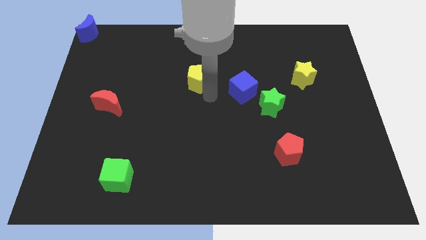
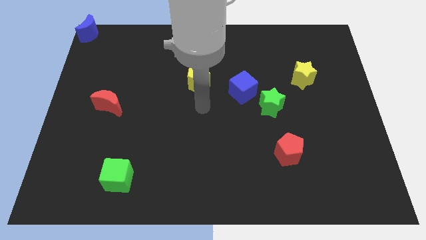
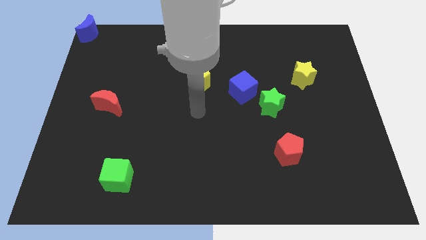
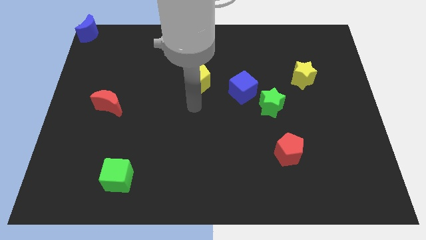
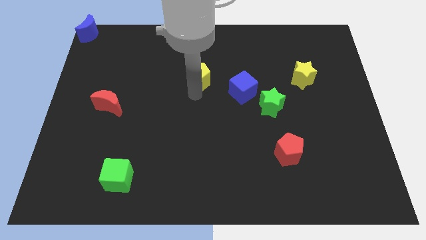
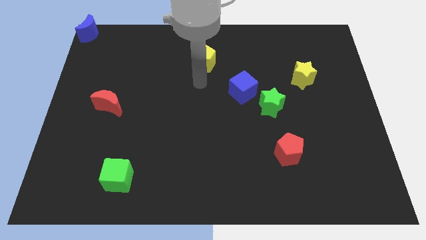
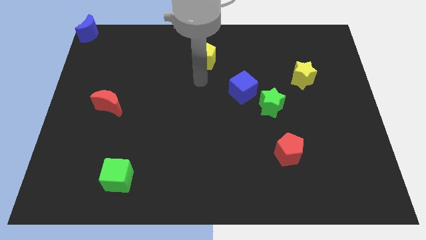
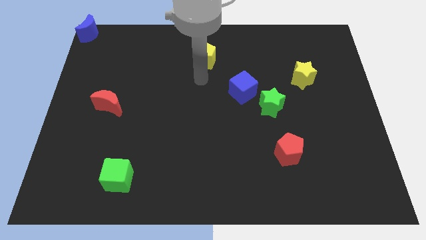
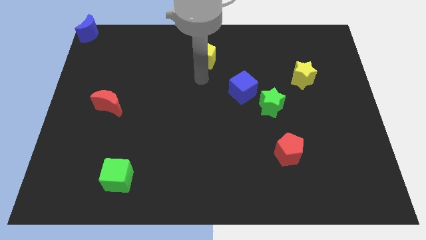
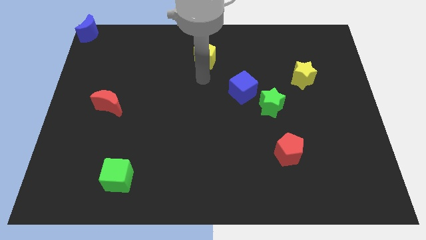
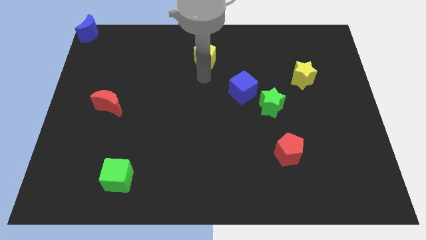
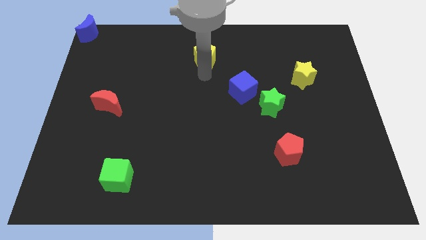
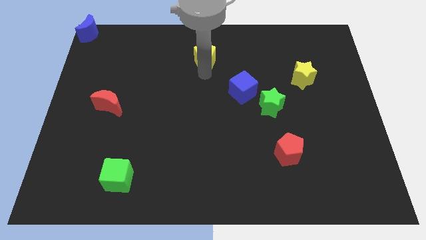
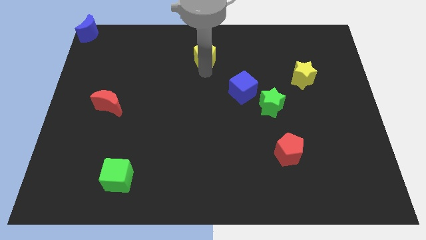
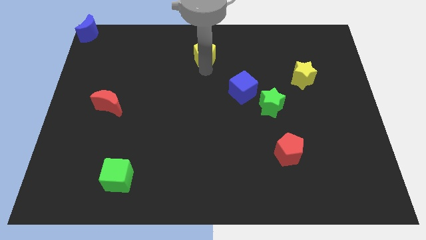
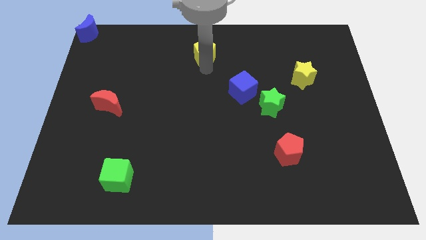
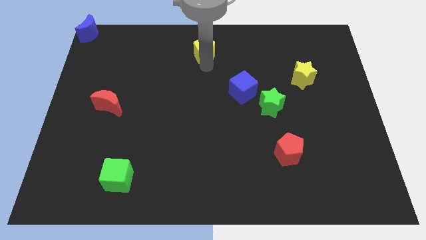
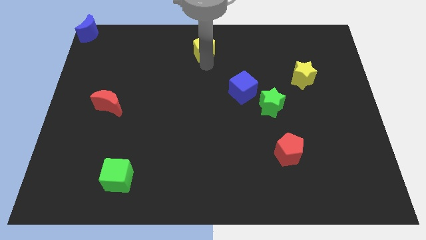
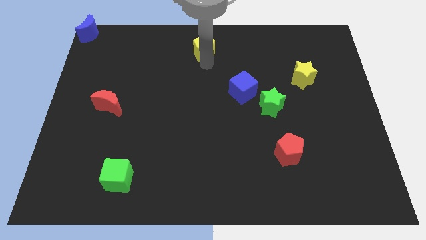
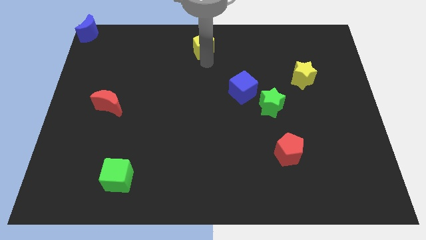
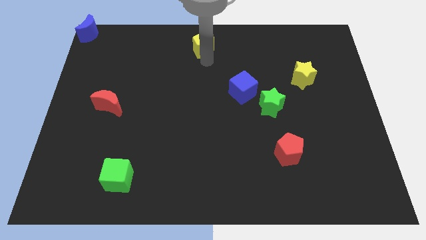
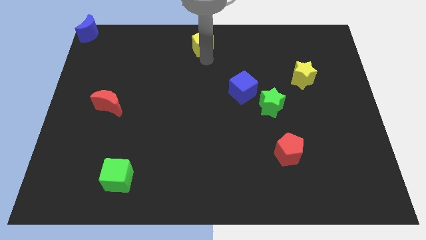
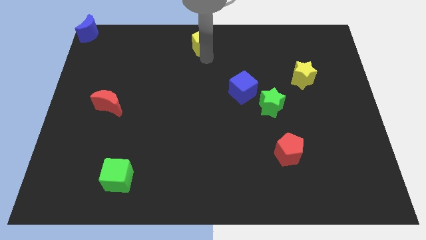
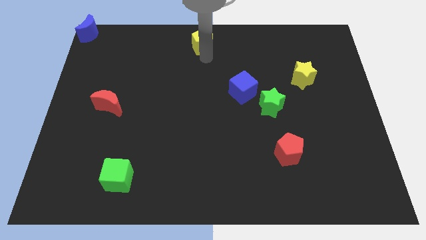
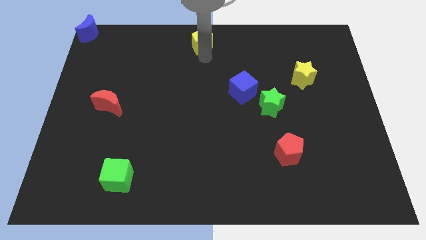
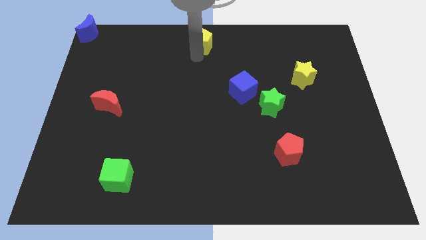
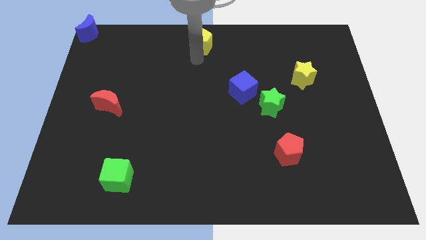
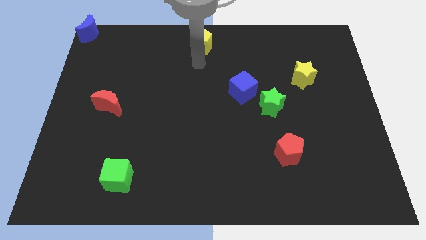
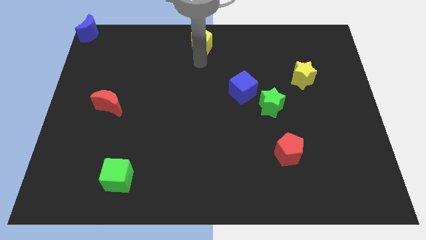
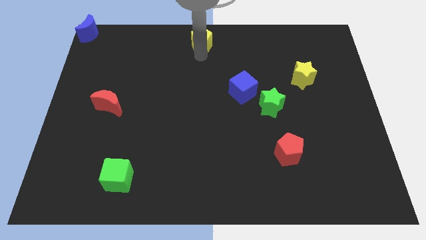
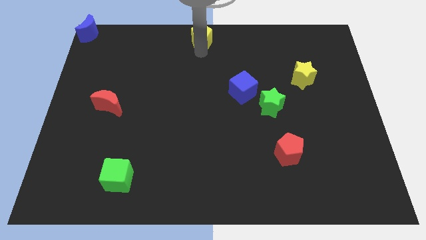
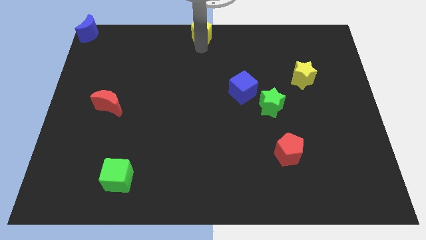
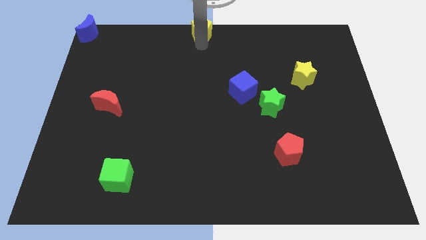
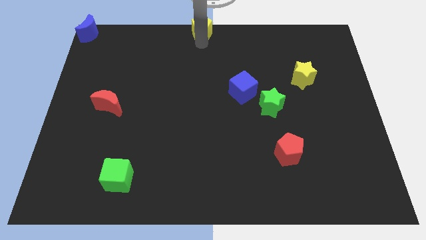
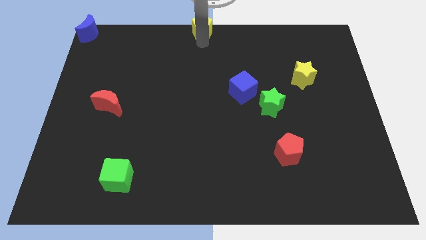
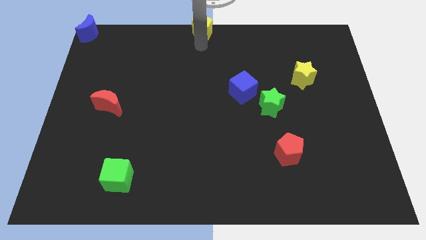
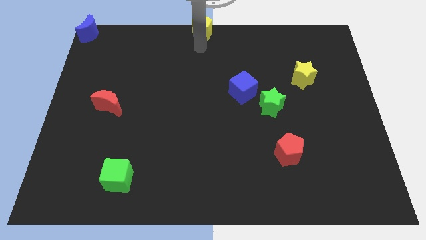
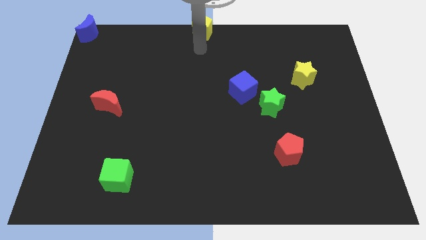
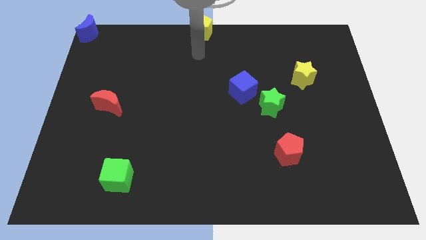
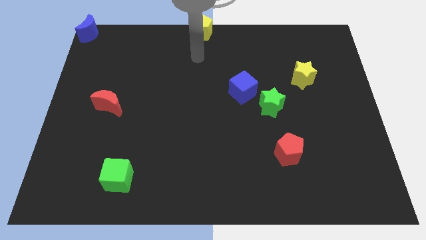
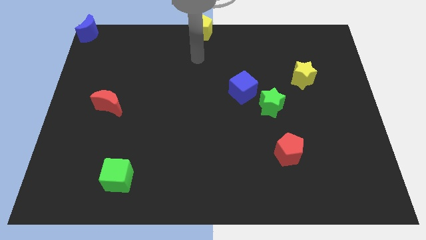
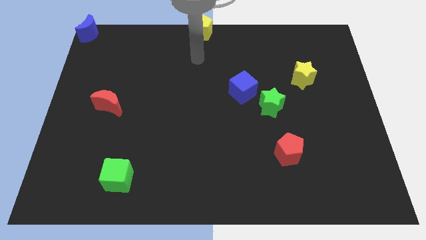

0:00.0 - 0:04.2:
push yellow pentagon to the top center

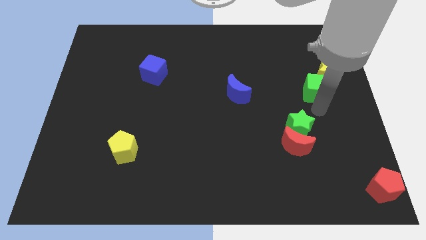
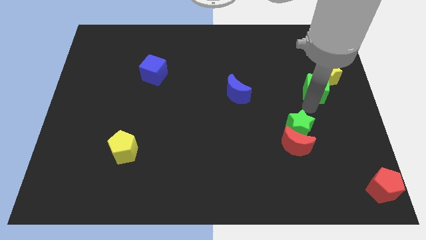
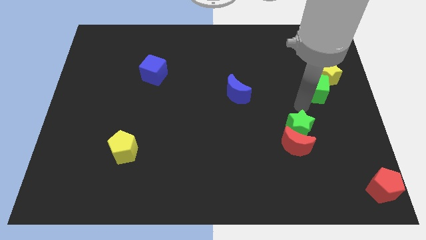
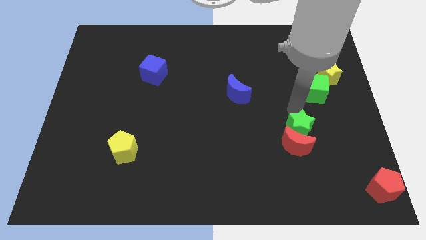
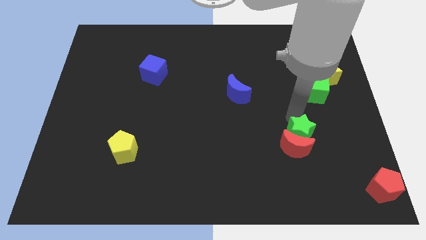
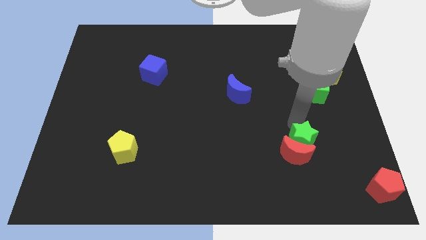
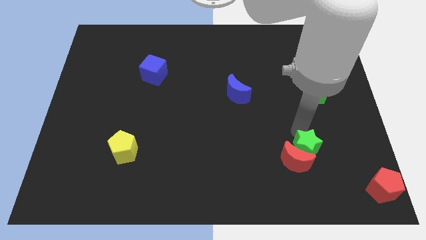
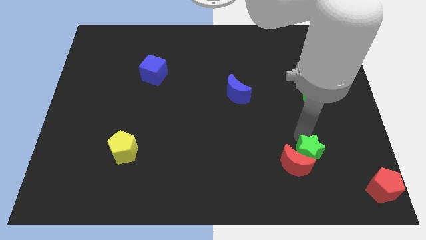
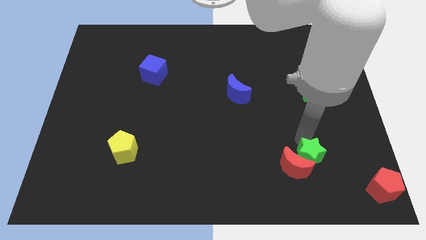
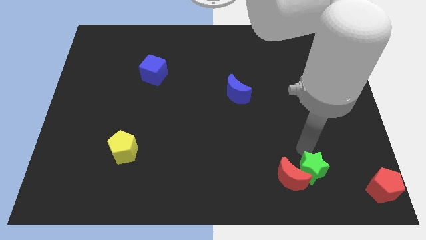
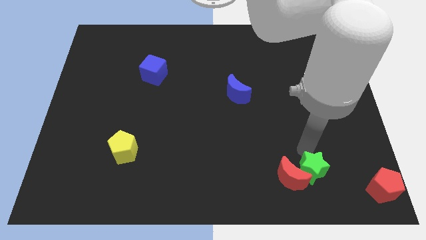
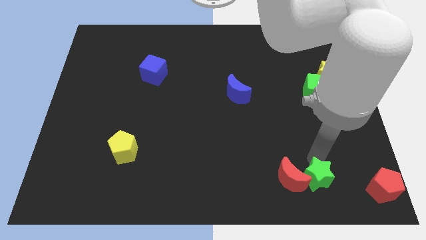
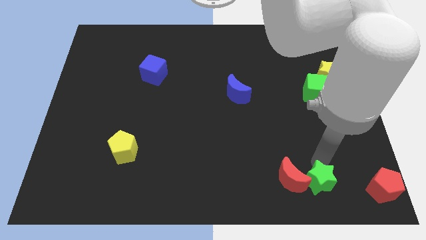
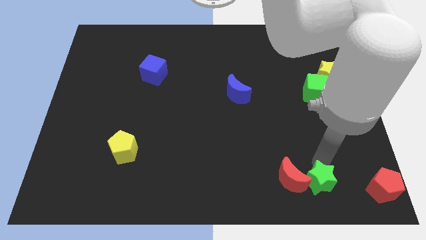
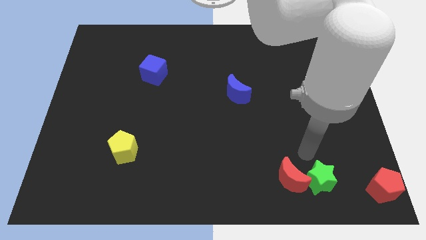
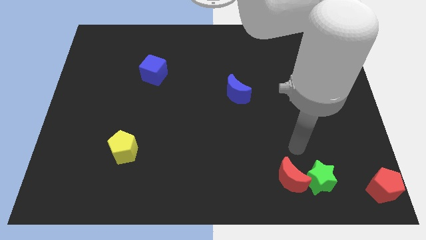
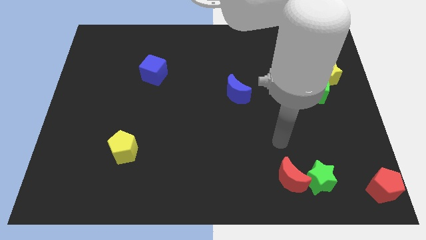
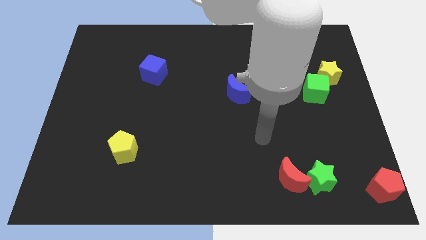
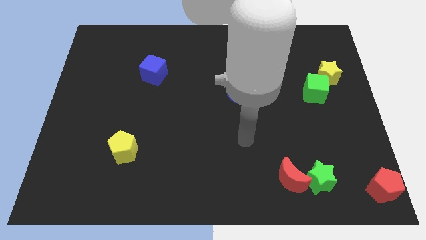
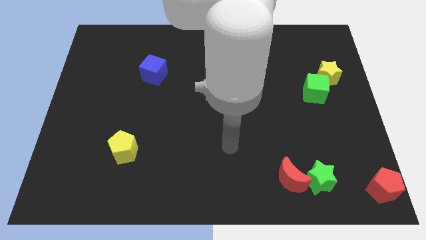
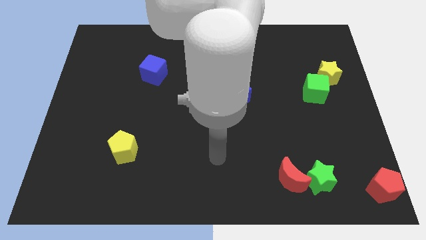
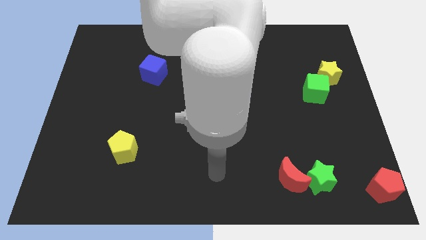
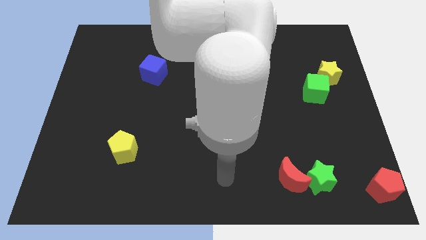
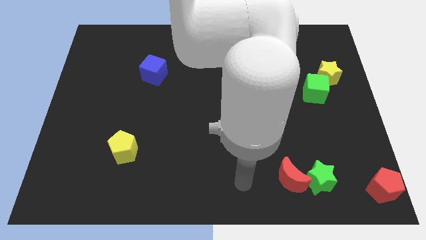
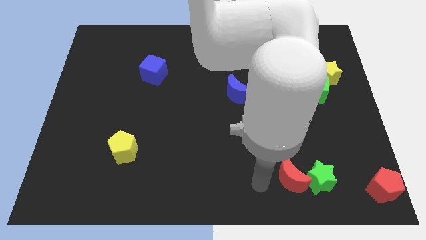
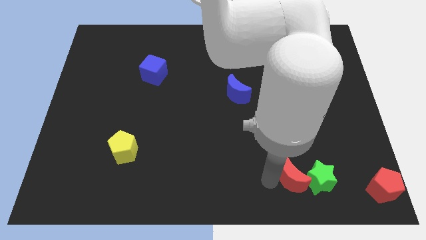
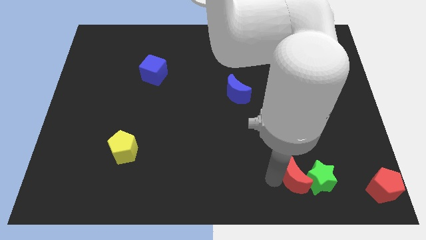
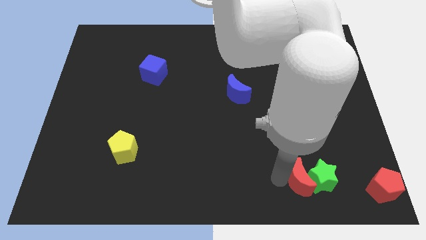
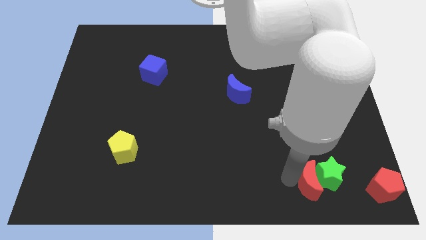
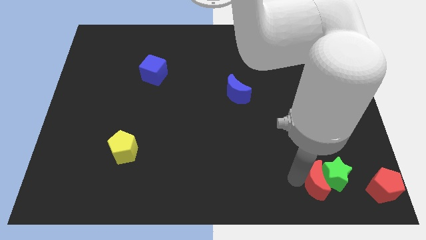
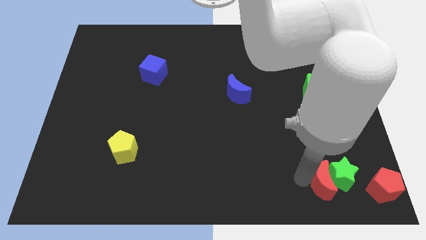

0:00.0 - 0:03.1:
move the green star into red crescent towards the bottom right of the board

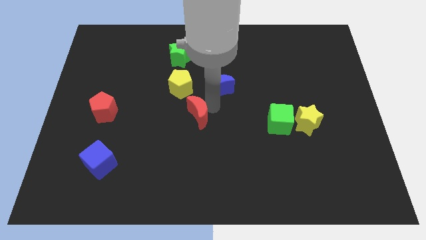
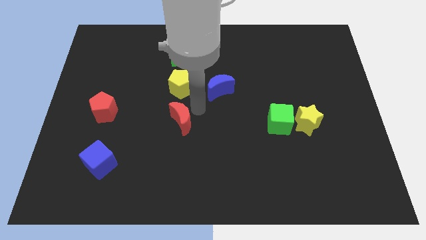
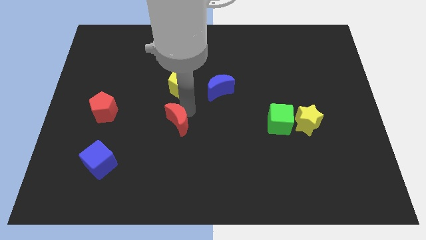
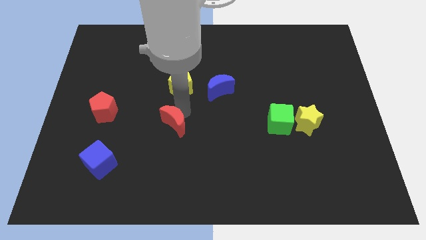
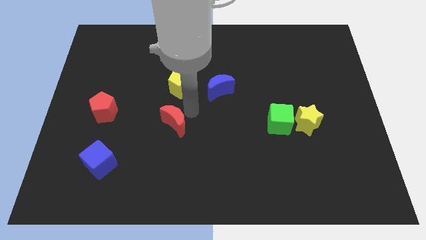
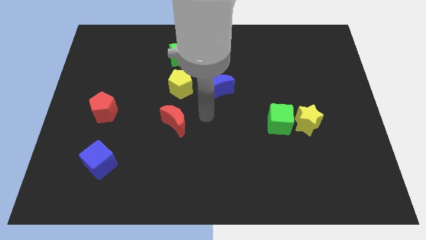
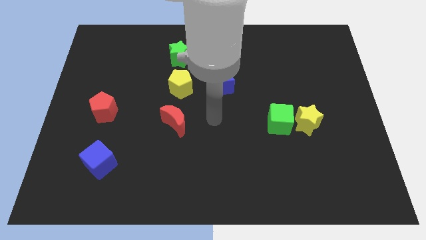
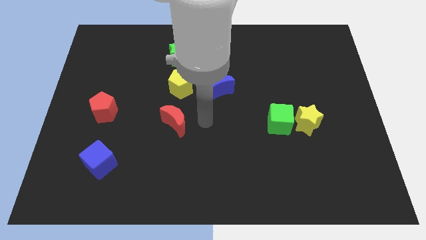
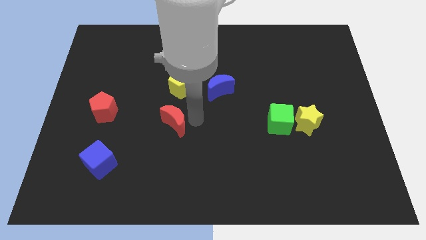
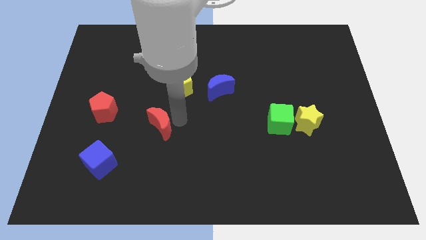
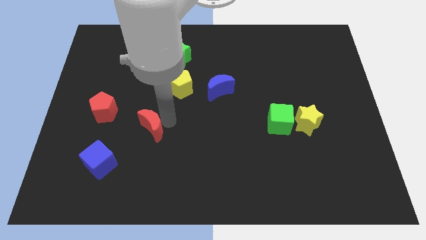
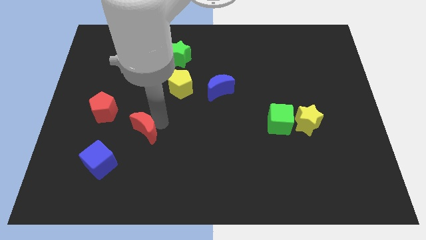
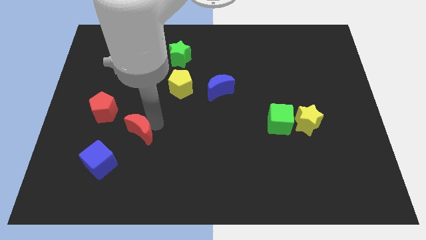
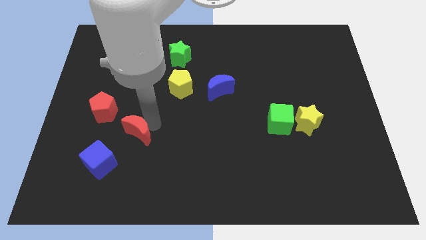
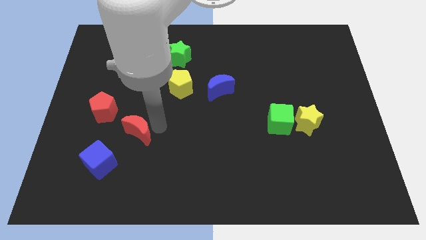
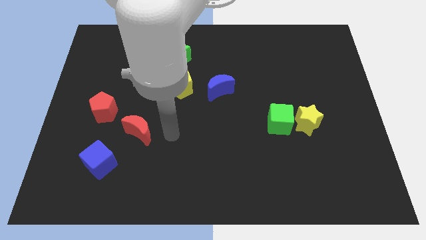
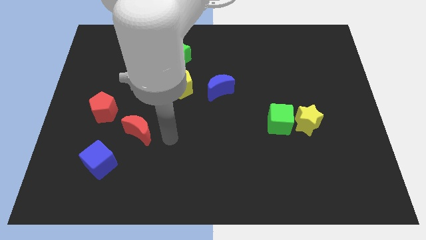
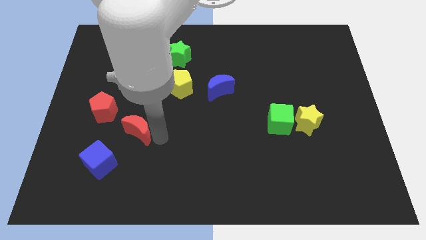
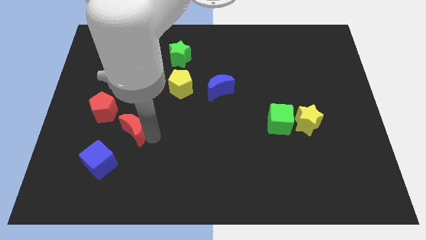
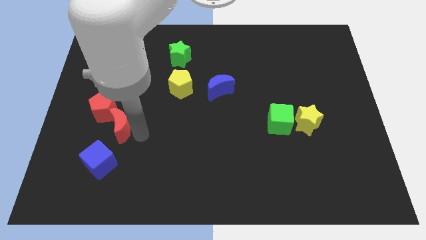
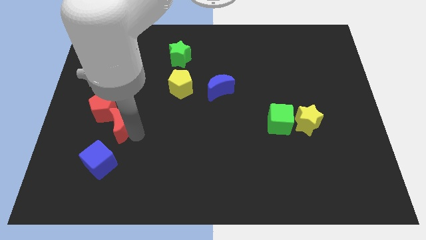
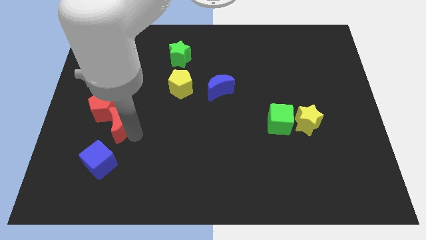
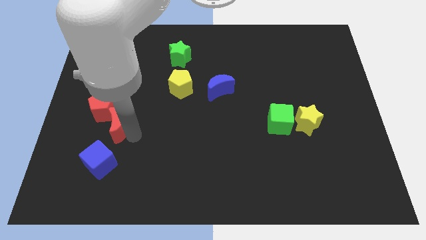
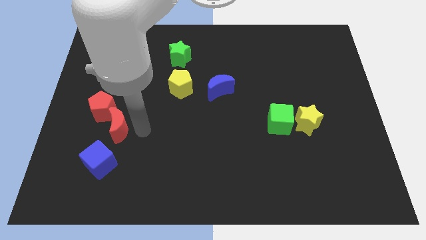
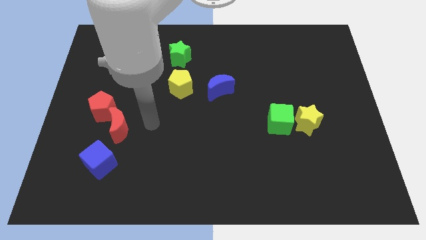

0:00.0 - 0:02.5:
push the red crescent to the red pentagon
